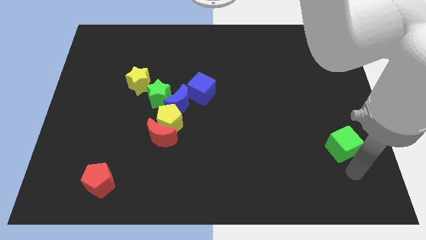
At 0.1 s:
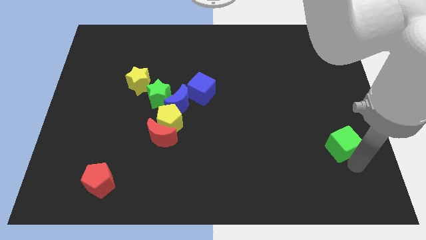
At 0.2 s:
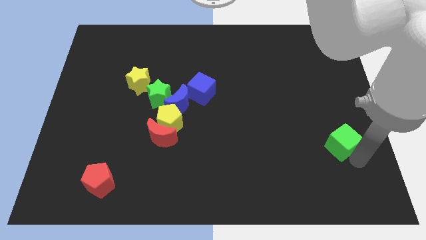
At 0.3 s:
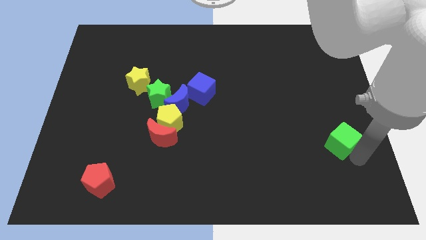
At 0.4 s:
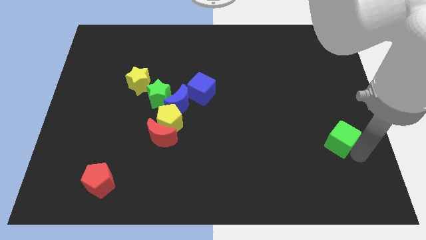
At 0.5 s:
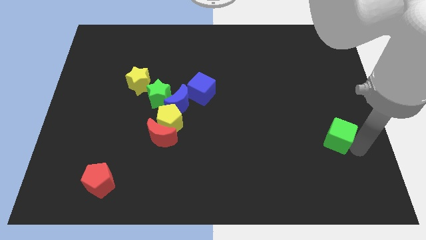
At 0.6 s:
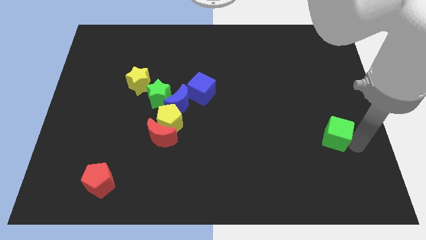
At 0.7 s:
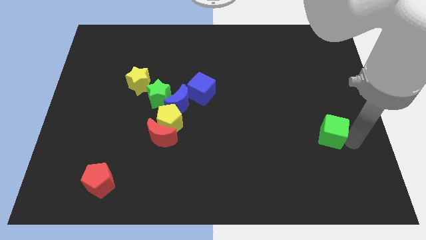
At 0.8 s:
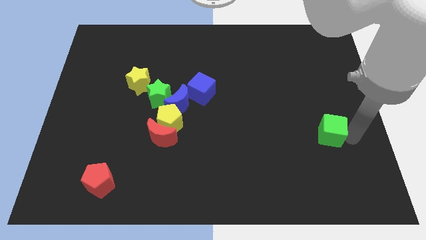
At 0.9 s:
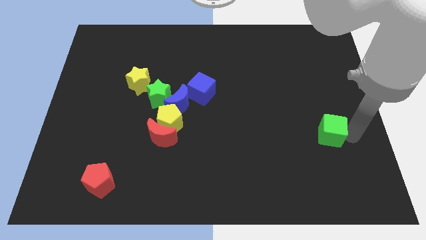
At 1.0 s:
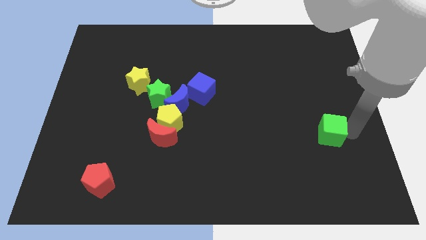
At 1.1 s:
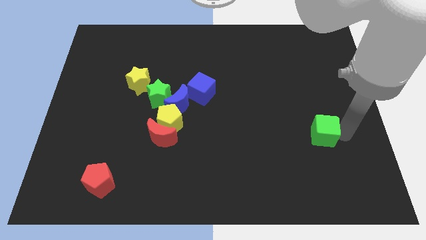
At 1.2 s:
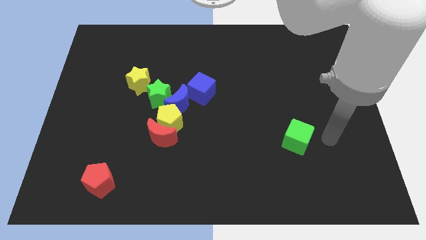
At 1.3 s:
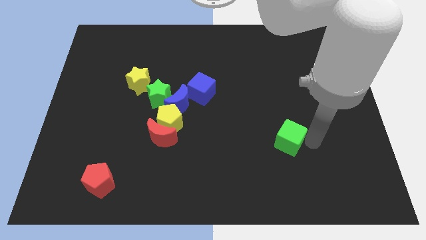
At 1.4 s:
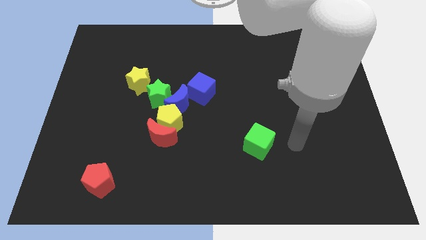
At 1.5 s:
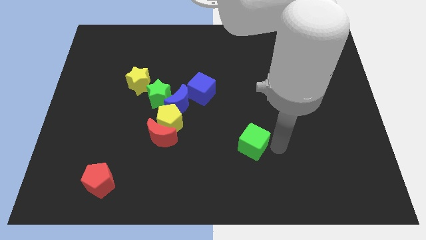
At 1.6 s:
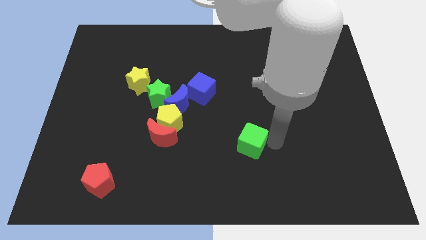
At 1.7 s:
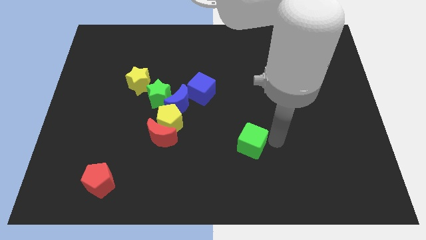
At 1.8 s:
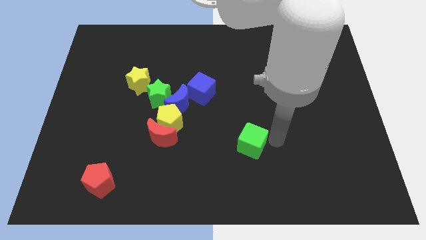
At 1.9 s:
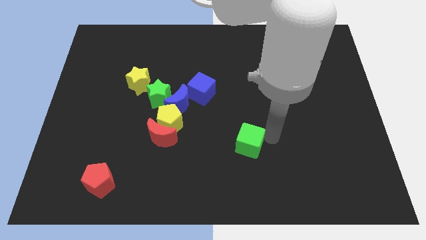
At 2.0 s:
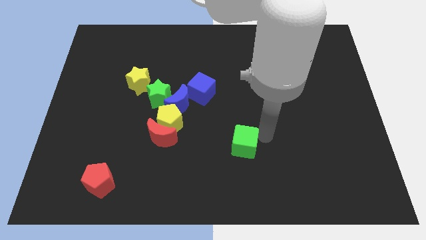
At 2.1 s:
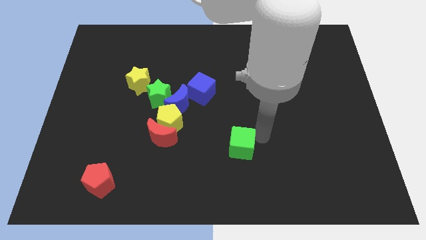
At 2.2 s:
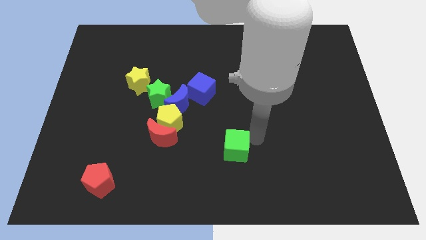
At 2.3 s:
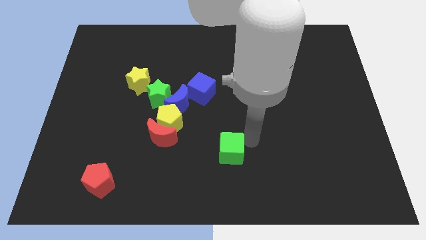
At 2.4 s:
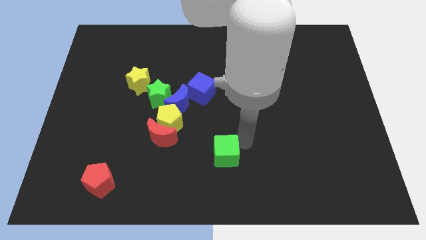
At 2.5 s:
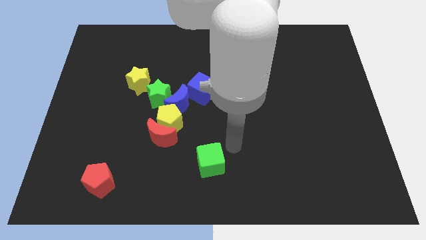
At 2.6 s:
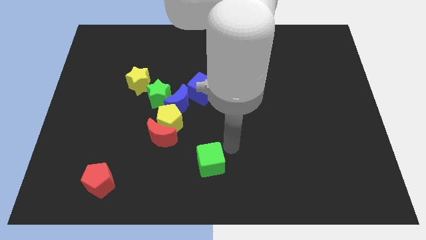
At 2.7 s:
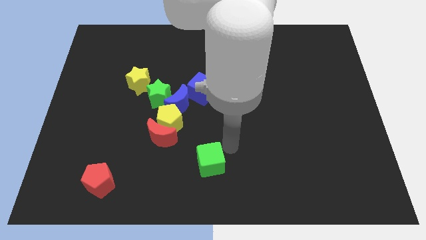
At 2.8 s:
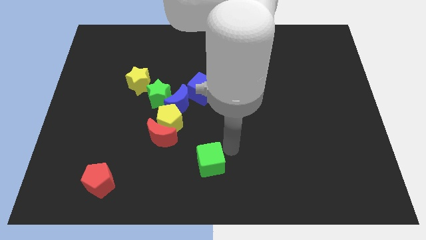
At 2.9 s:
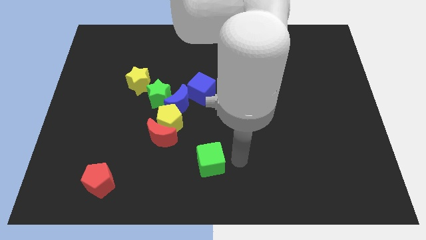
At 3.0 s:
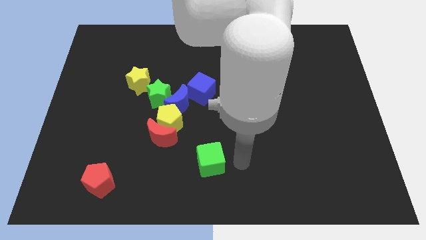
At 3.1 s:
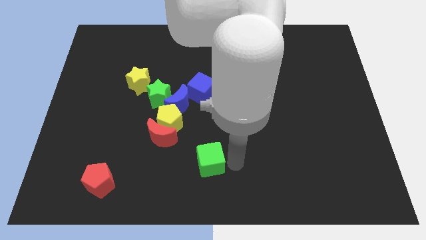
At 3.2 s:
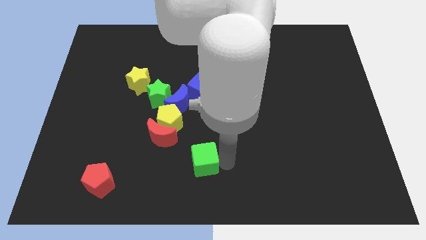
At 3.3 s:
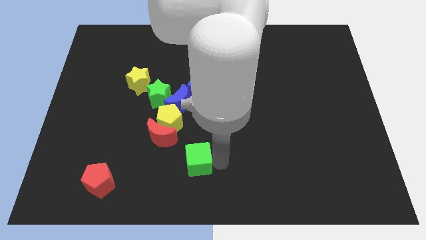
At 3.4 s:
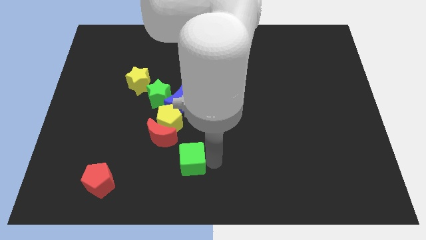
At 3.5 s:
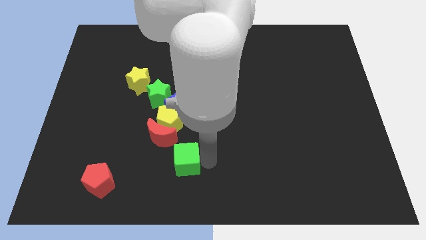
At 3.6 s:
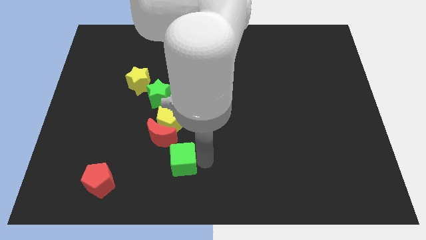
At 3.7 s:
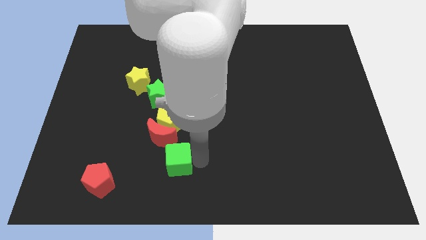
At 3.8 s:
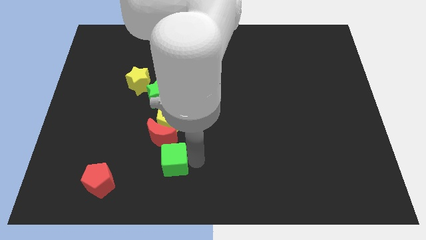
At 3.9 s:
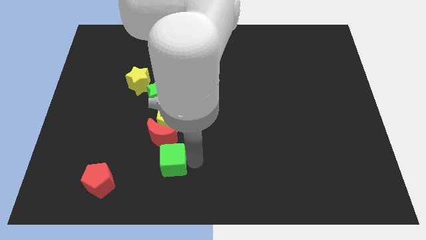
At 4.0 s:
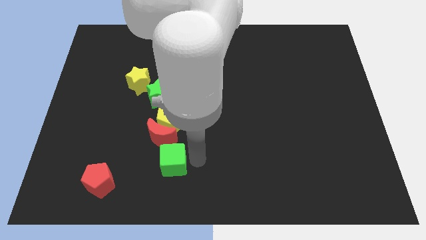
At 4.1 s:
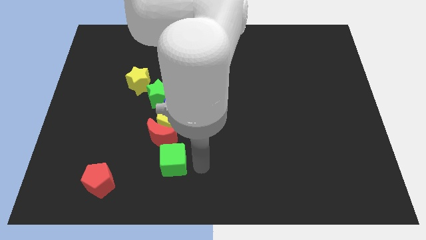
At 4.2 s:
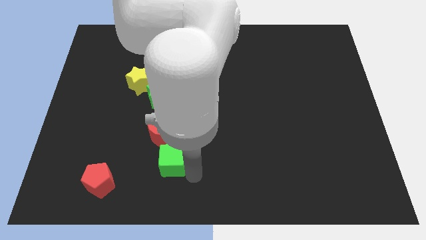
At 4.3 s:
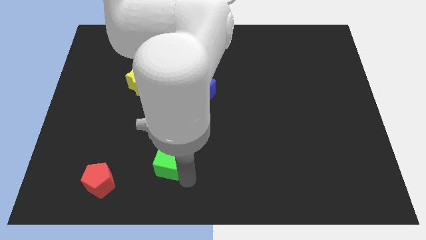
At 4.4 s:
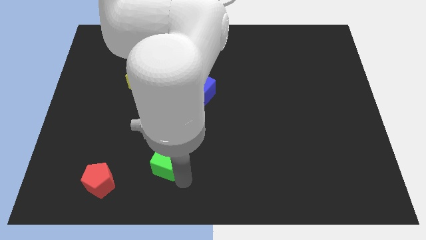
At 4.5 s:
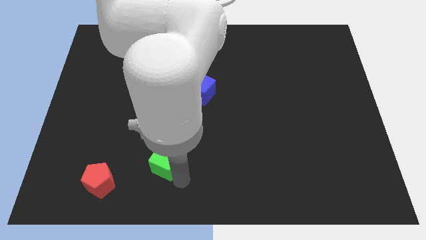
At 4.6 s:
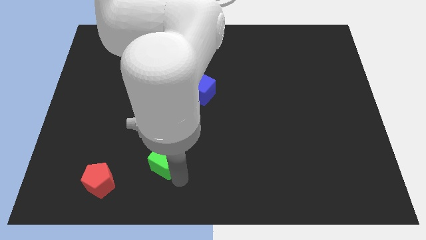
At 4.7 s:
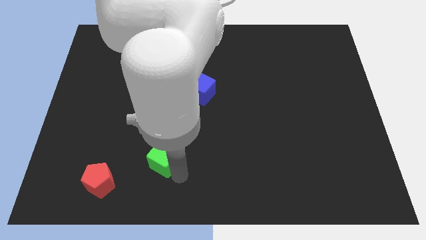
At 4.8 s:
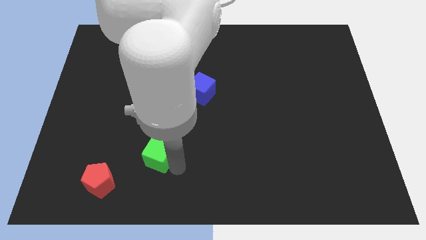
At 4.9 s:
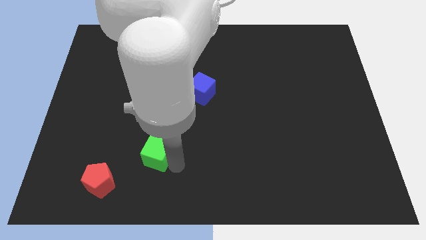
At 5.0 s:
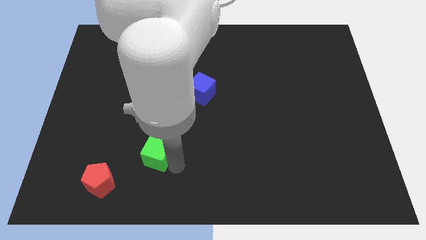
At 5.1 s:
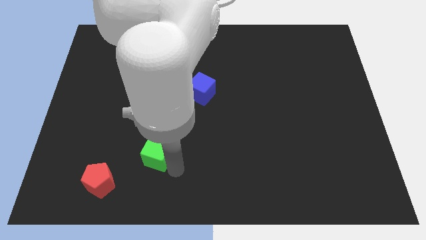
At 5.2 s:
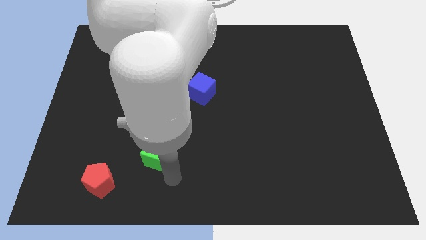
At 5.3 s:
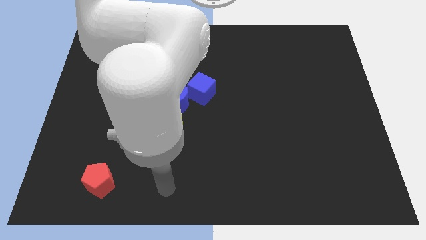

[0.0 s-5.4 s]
push the green cube below the red crescent

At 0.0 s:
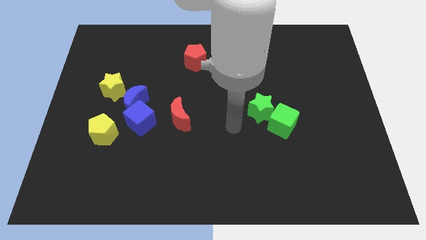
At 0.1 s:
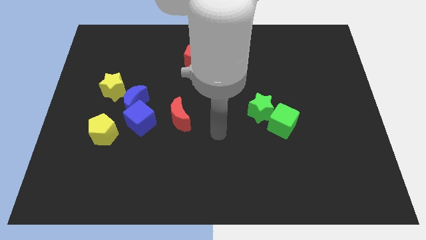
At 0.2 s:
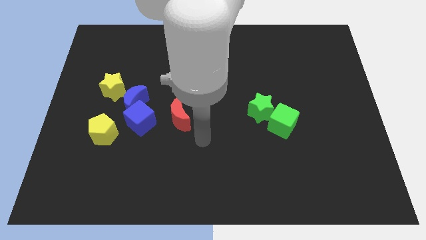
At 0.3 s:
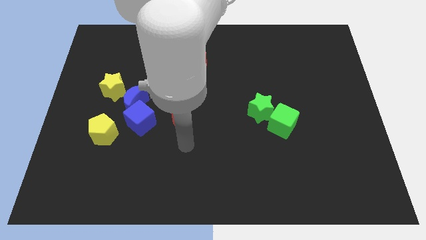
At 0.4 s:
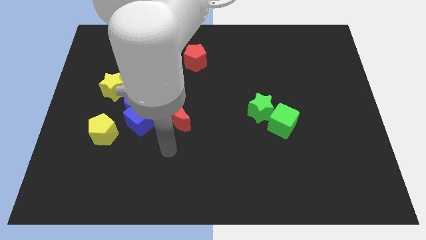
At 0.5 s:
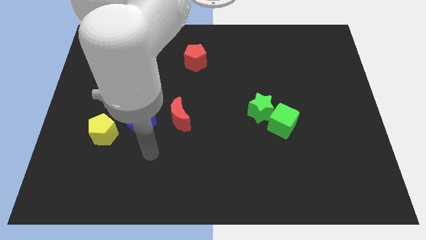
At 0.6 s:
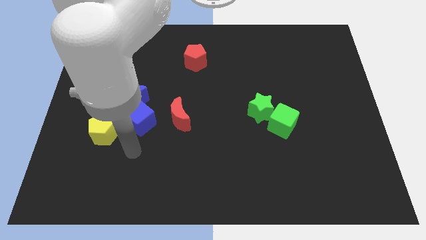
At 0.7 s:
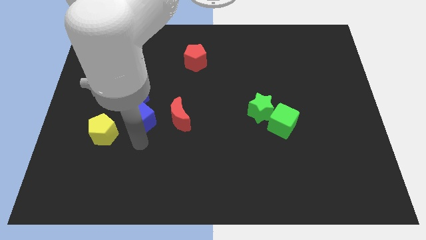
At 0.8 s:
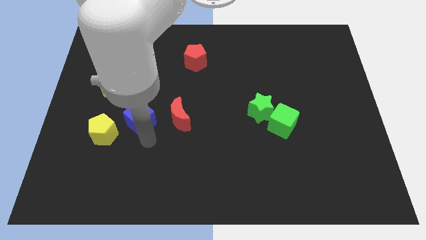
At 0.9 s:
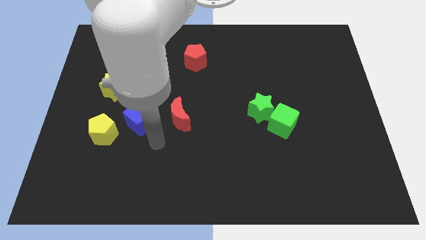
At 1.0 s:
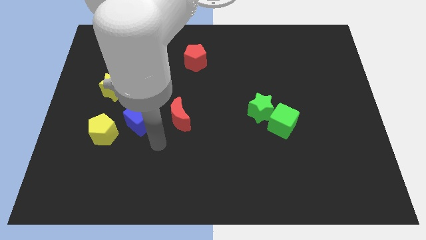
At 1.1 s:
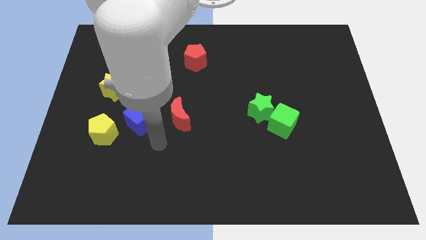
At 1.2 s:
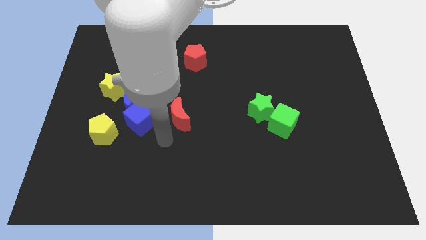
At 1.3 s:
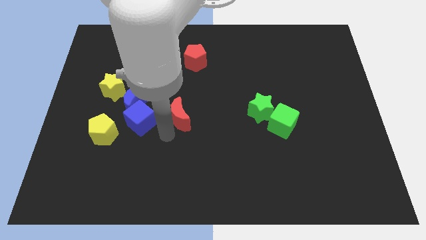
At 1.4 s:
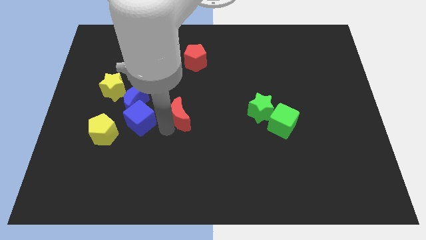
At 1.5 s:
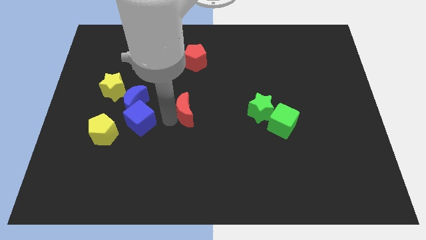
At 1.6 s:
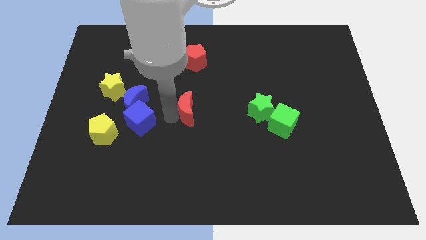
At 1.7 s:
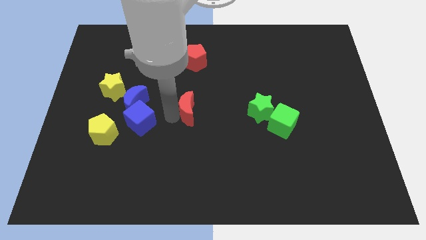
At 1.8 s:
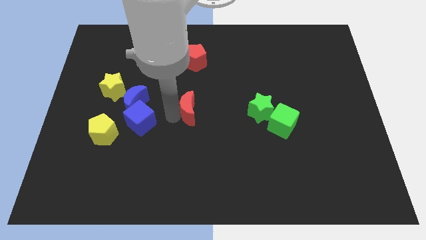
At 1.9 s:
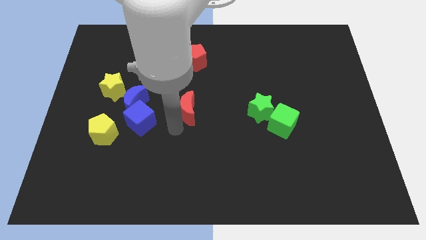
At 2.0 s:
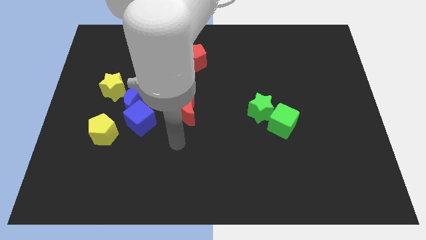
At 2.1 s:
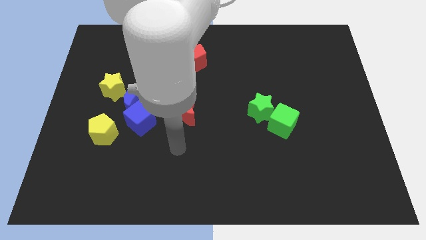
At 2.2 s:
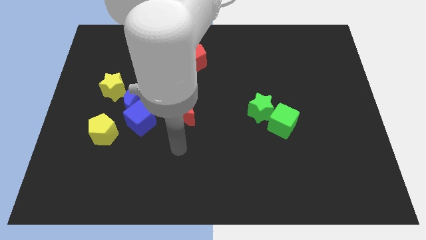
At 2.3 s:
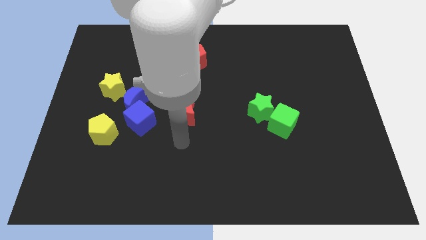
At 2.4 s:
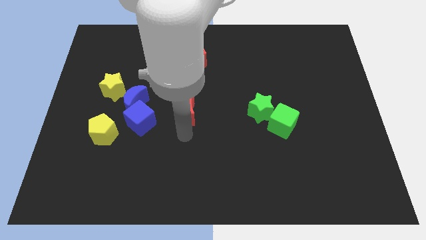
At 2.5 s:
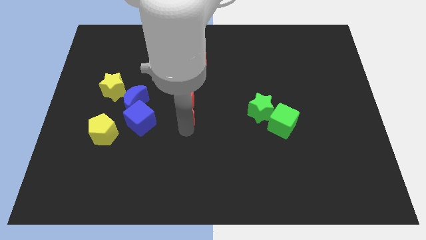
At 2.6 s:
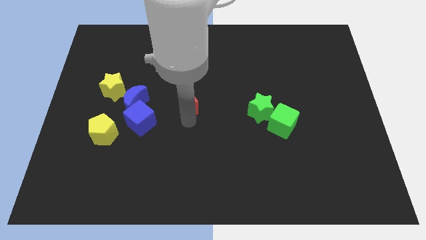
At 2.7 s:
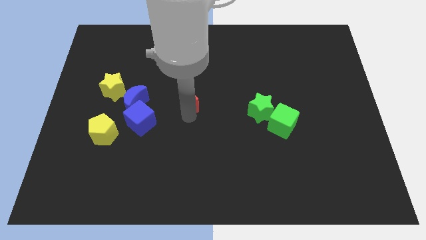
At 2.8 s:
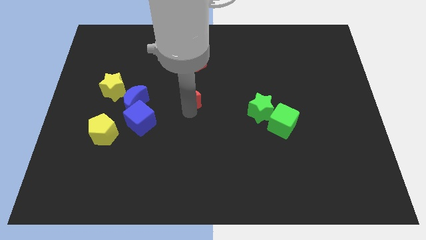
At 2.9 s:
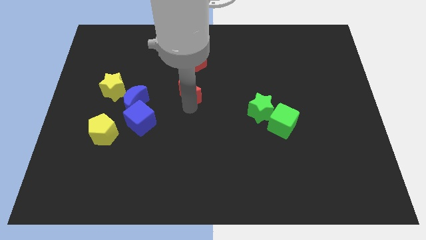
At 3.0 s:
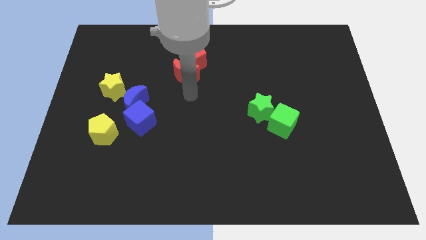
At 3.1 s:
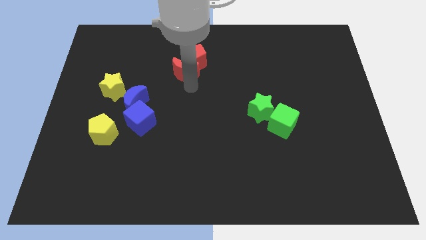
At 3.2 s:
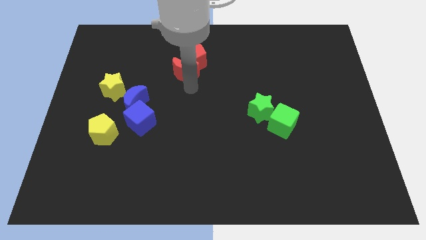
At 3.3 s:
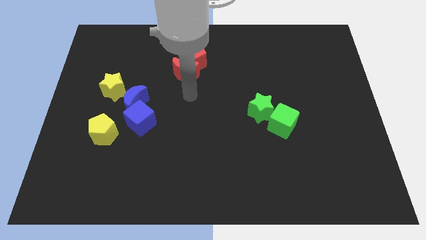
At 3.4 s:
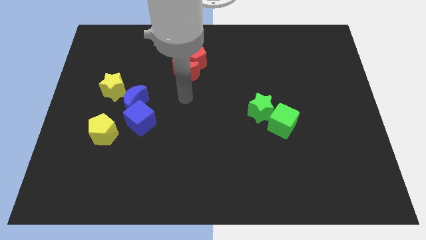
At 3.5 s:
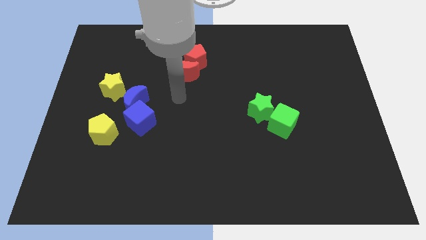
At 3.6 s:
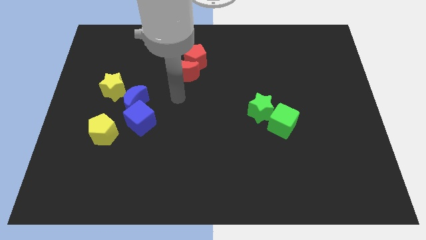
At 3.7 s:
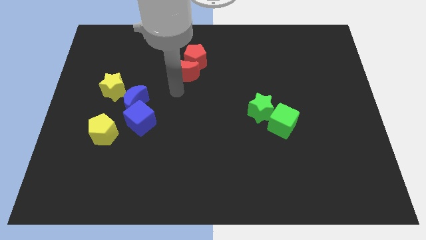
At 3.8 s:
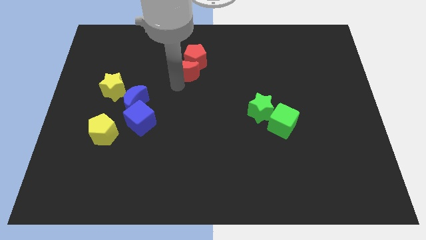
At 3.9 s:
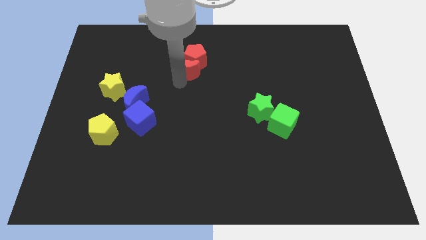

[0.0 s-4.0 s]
move the red moon into the red pentagon
